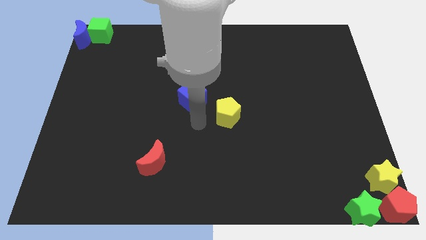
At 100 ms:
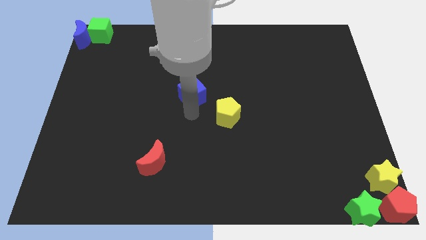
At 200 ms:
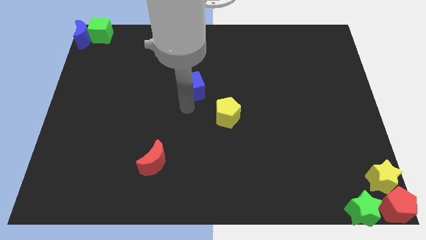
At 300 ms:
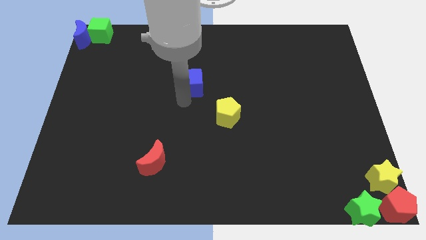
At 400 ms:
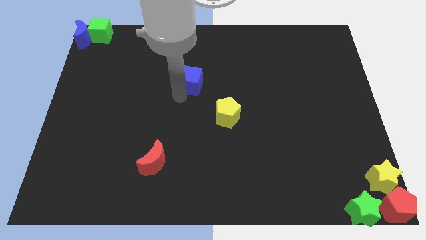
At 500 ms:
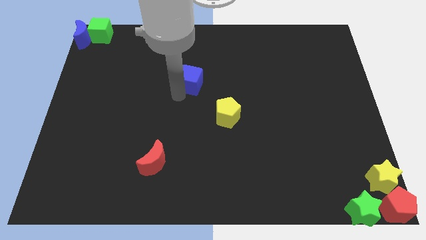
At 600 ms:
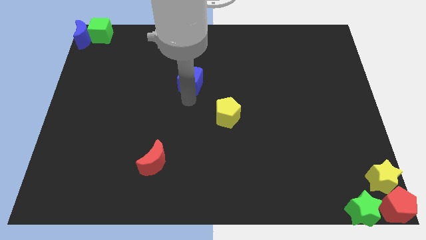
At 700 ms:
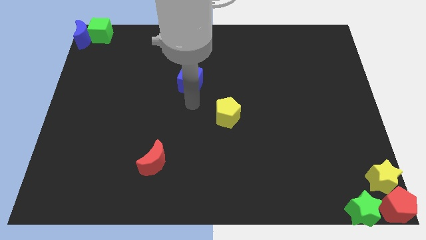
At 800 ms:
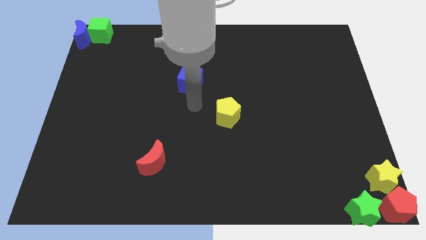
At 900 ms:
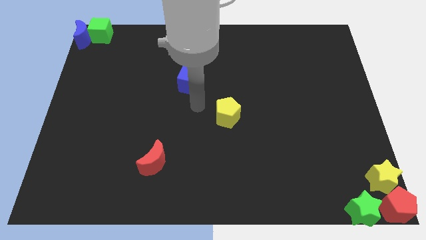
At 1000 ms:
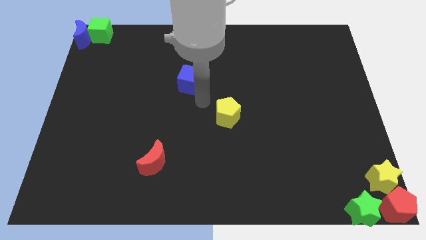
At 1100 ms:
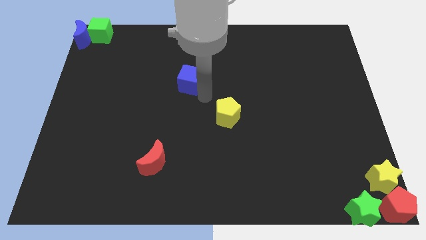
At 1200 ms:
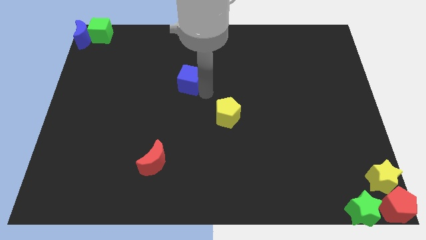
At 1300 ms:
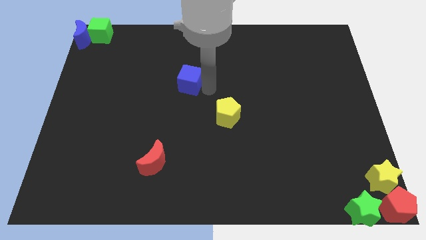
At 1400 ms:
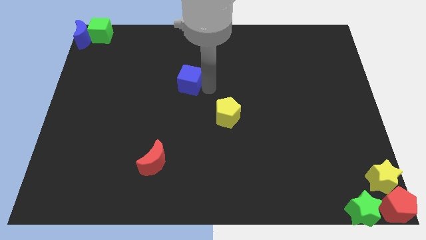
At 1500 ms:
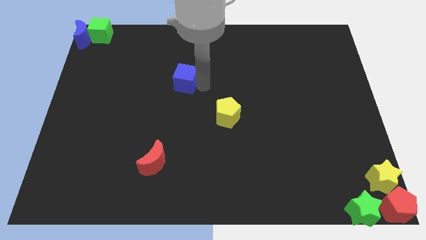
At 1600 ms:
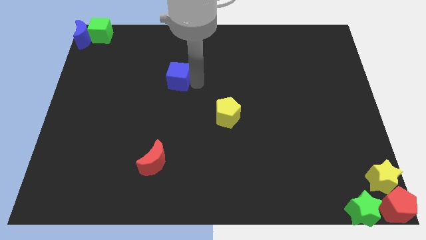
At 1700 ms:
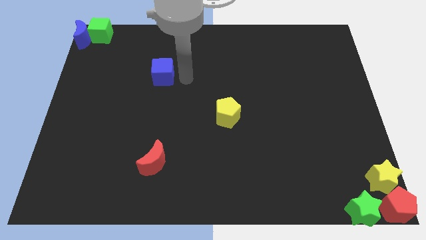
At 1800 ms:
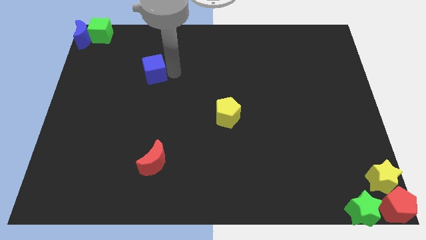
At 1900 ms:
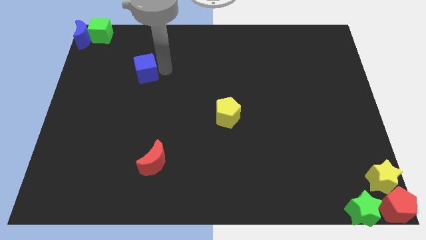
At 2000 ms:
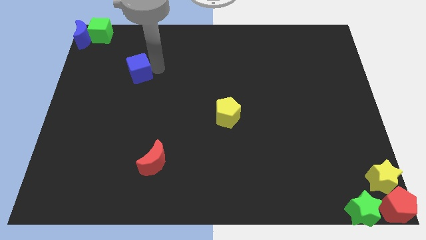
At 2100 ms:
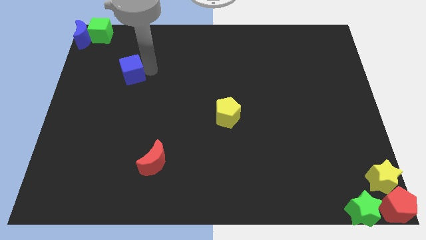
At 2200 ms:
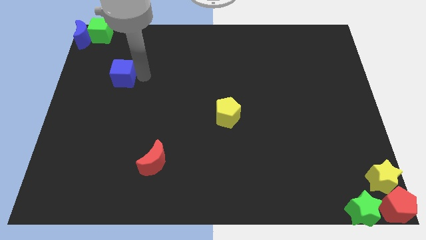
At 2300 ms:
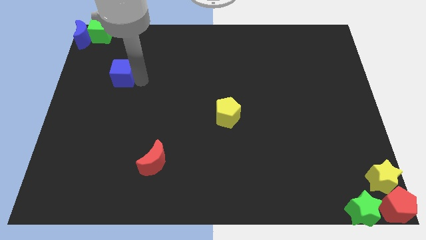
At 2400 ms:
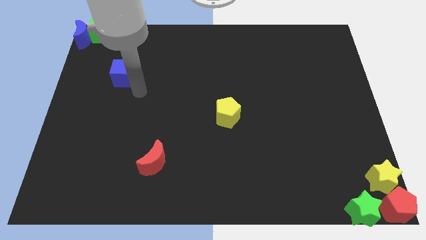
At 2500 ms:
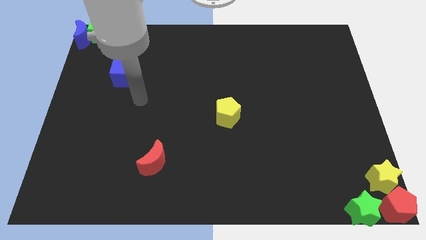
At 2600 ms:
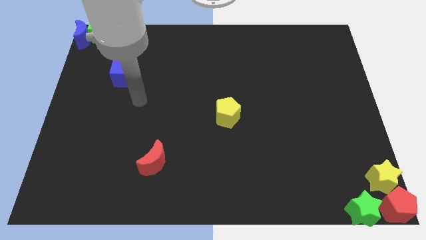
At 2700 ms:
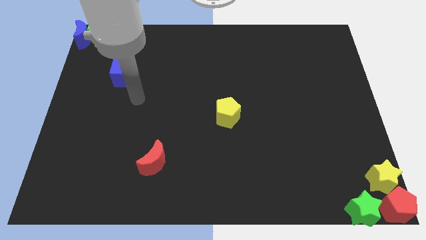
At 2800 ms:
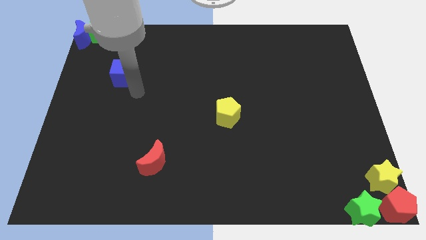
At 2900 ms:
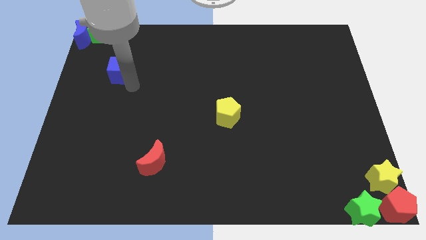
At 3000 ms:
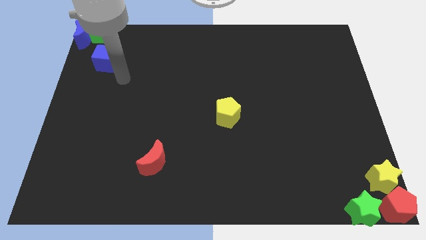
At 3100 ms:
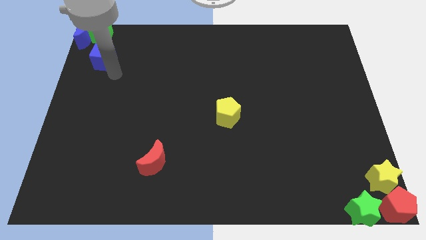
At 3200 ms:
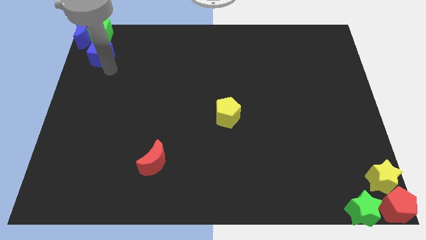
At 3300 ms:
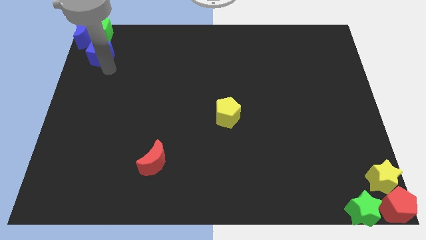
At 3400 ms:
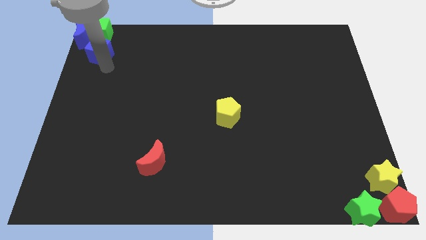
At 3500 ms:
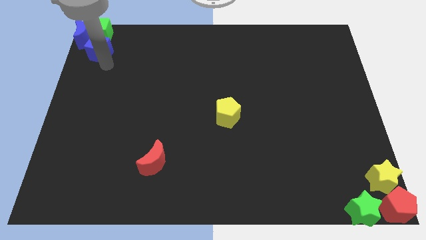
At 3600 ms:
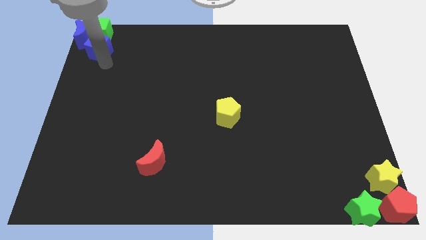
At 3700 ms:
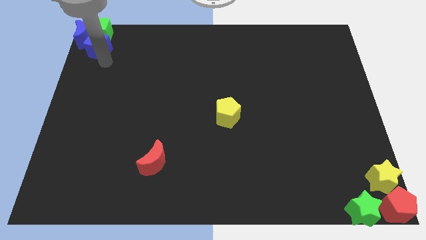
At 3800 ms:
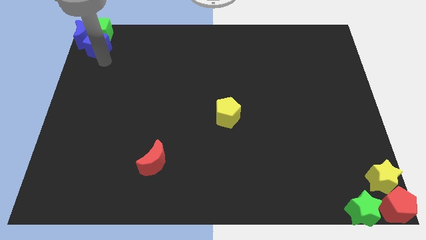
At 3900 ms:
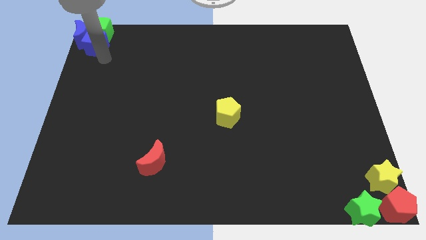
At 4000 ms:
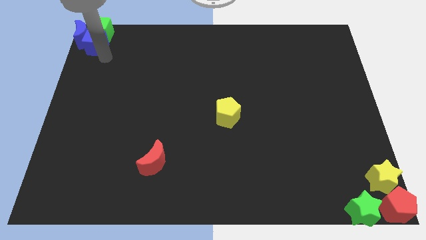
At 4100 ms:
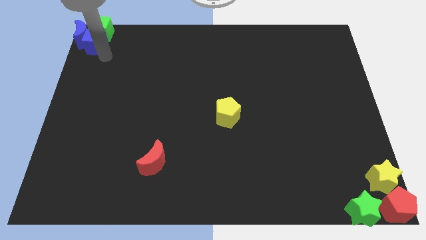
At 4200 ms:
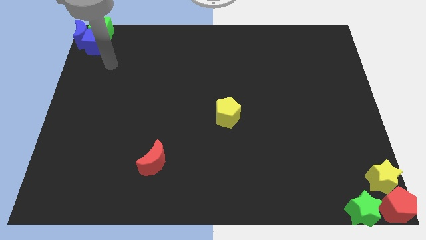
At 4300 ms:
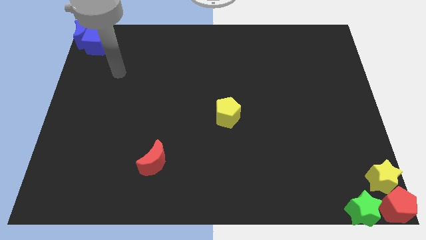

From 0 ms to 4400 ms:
move the blue cube in between of blue moon and green cube

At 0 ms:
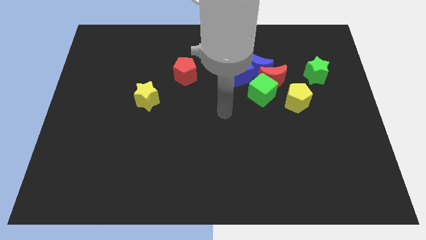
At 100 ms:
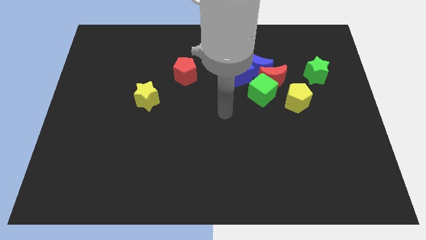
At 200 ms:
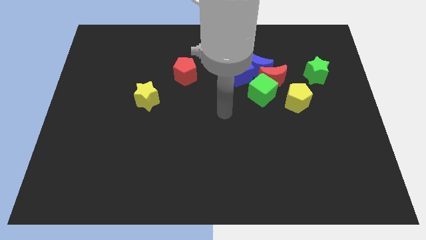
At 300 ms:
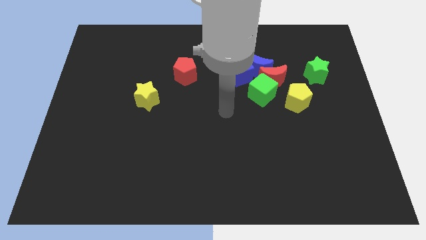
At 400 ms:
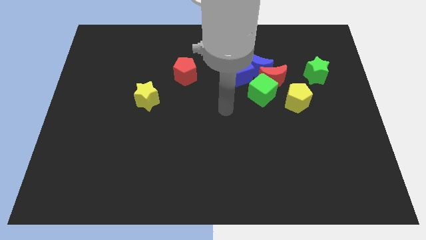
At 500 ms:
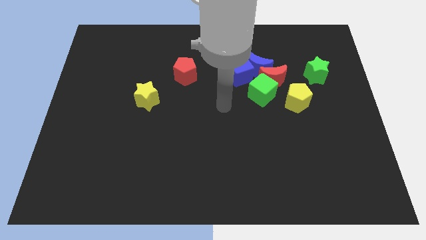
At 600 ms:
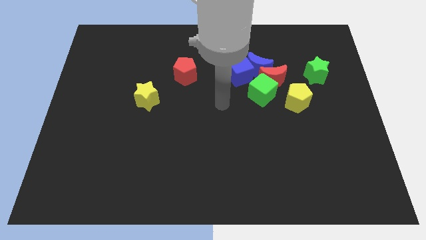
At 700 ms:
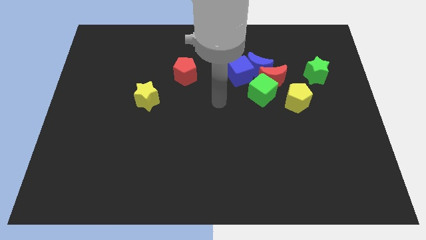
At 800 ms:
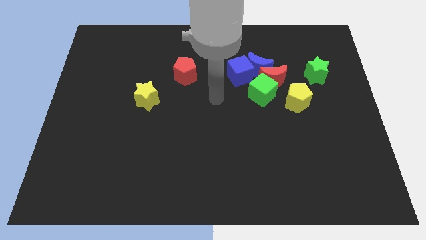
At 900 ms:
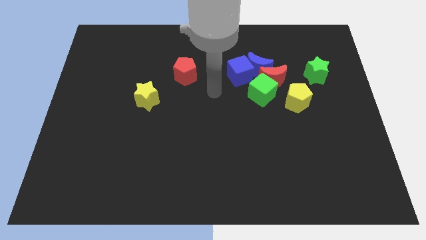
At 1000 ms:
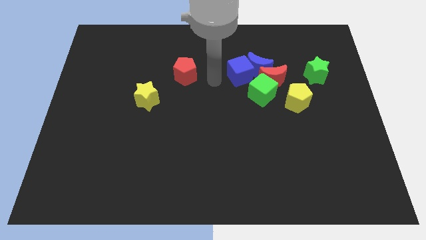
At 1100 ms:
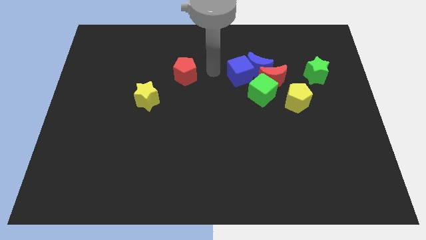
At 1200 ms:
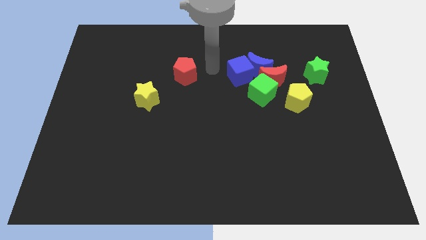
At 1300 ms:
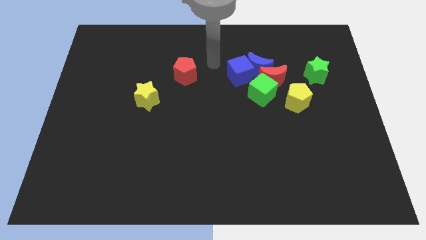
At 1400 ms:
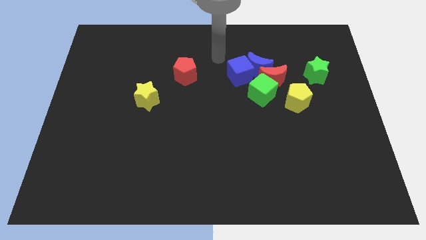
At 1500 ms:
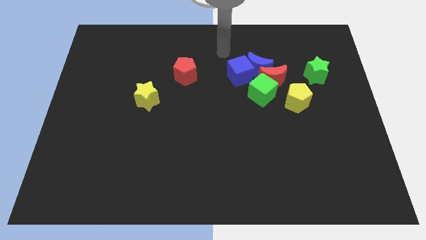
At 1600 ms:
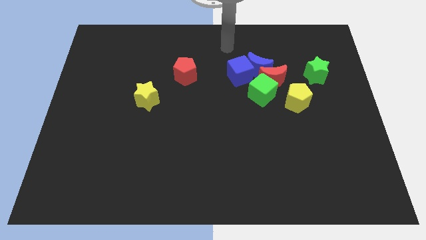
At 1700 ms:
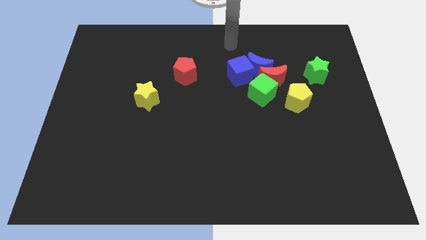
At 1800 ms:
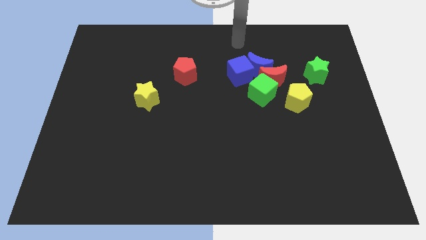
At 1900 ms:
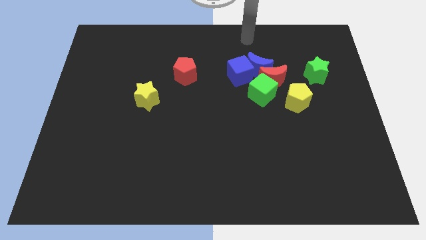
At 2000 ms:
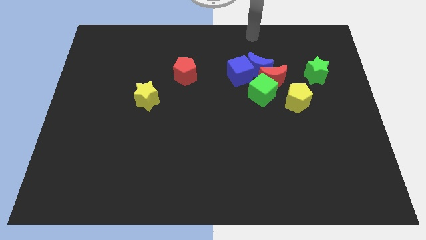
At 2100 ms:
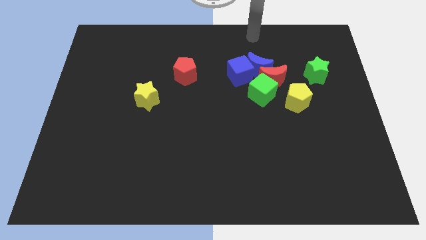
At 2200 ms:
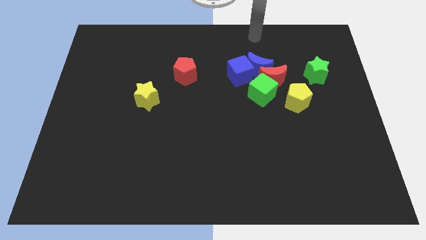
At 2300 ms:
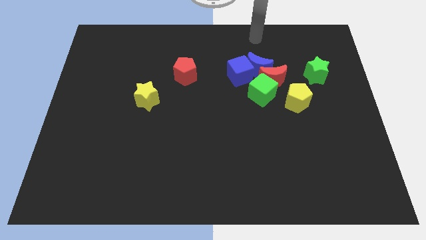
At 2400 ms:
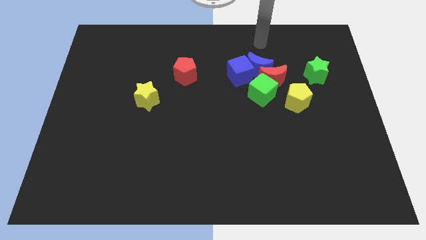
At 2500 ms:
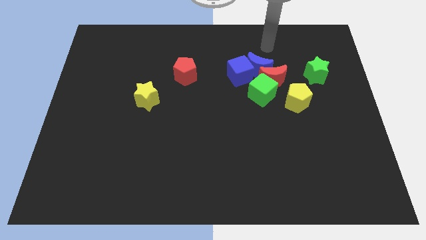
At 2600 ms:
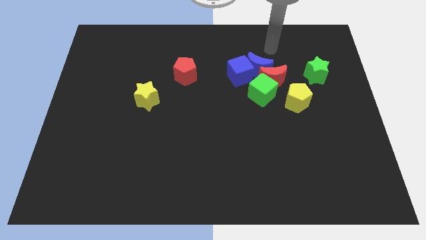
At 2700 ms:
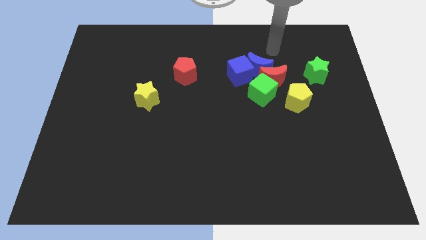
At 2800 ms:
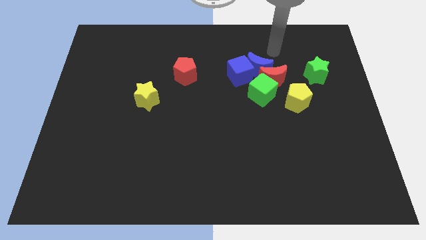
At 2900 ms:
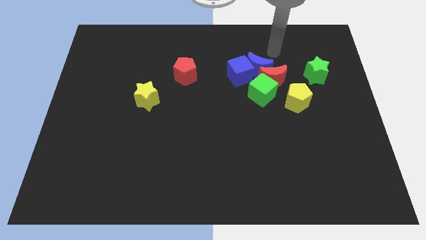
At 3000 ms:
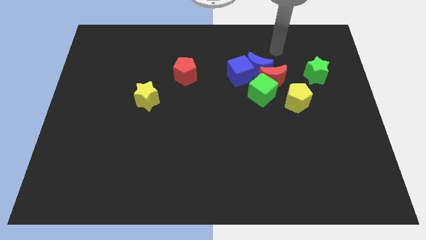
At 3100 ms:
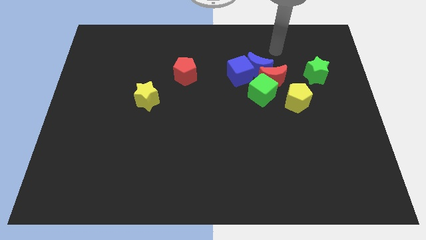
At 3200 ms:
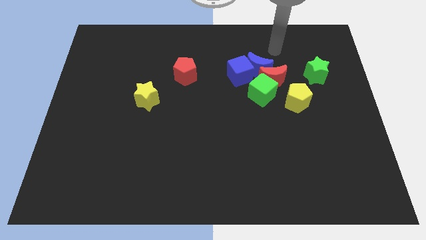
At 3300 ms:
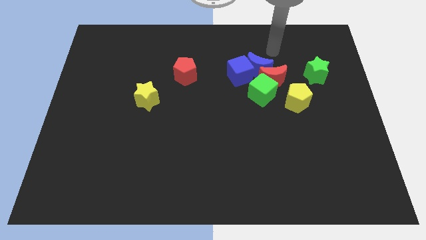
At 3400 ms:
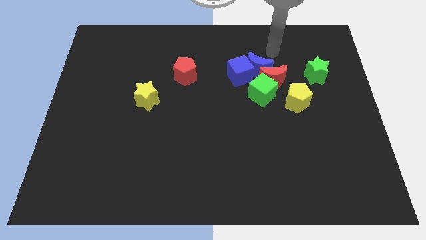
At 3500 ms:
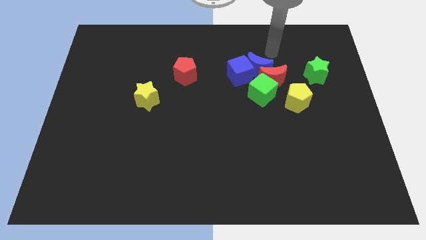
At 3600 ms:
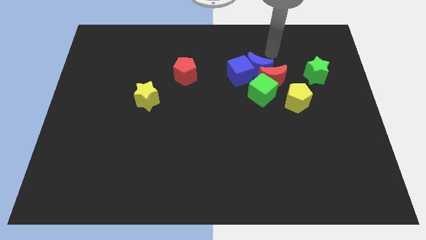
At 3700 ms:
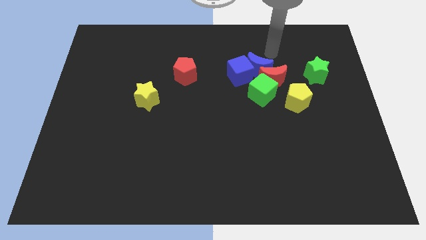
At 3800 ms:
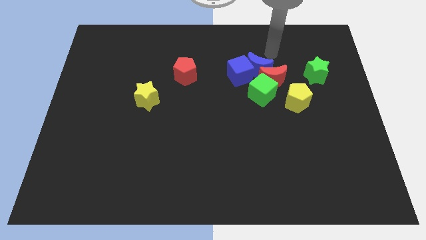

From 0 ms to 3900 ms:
place the arm close to the blue crescent

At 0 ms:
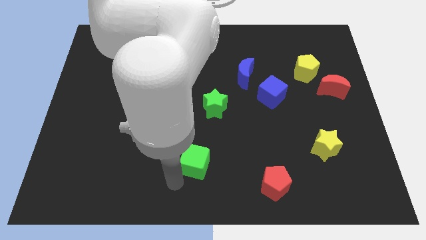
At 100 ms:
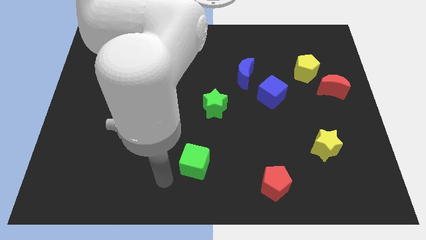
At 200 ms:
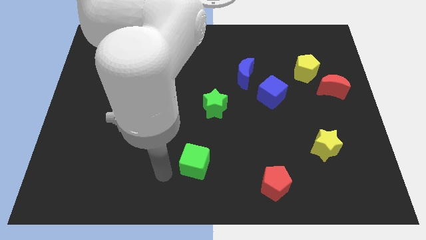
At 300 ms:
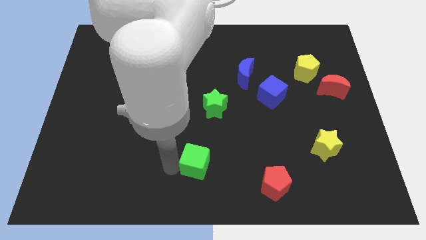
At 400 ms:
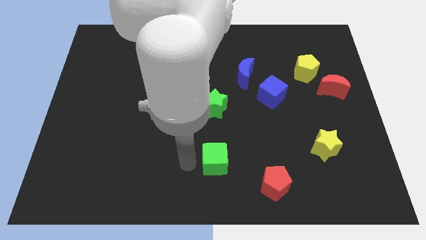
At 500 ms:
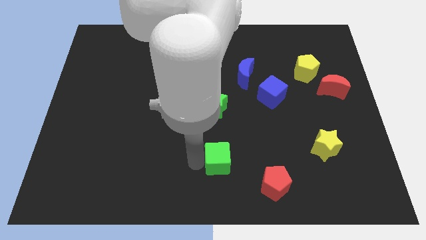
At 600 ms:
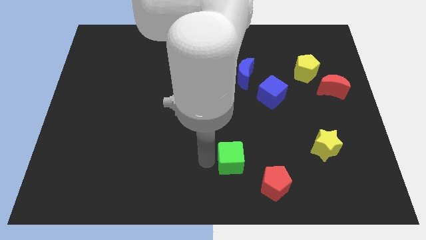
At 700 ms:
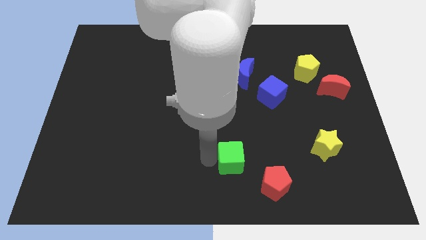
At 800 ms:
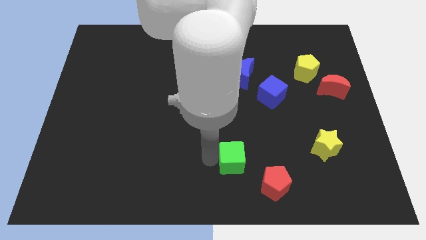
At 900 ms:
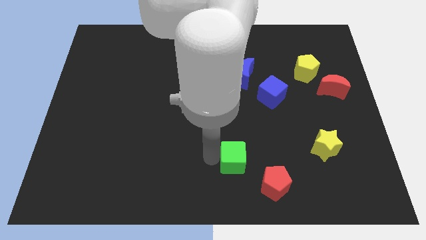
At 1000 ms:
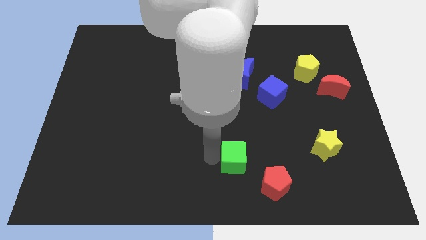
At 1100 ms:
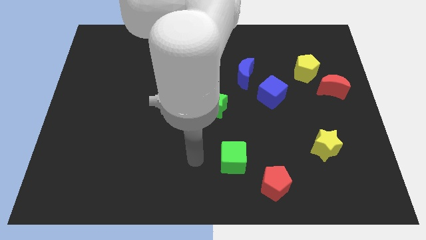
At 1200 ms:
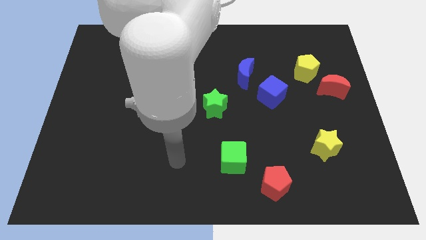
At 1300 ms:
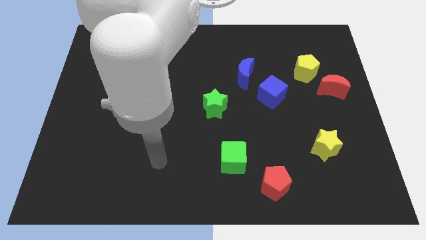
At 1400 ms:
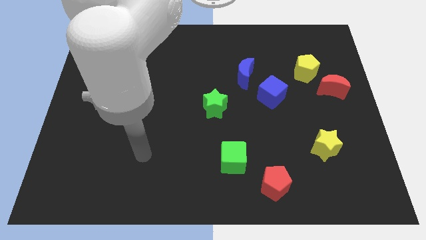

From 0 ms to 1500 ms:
push the green cube to the right of the board
